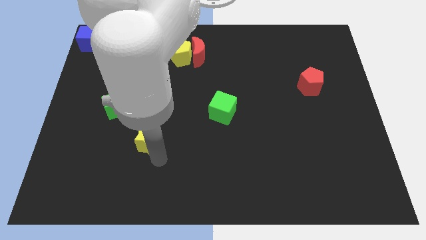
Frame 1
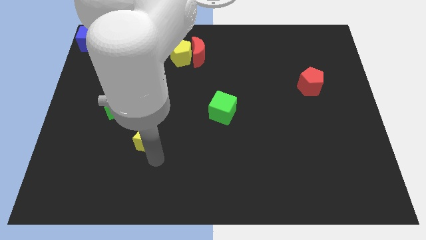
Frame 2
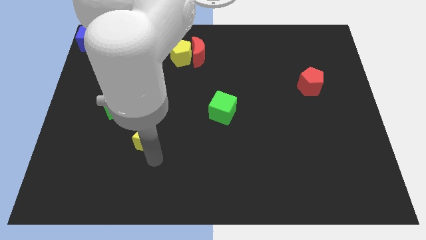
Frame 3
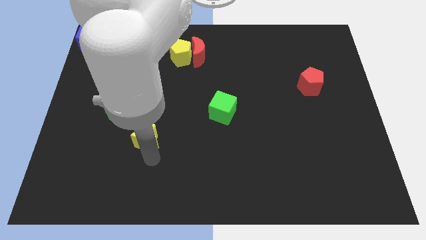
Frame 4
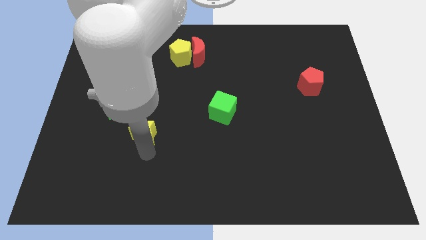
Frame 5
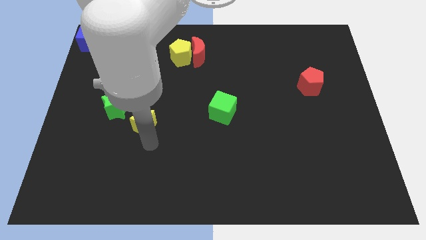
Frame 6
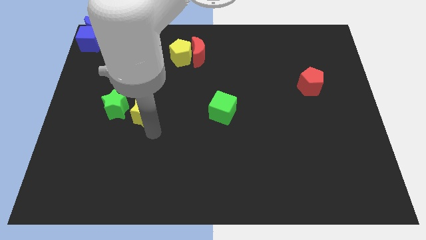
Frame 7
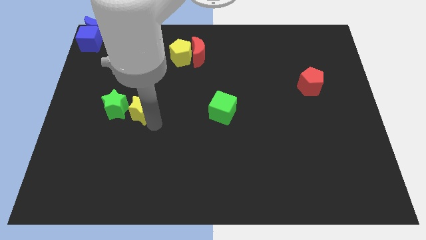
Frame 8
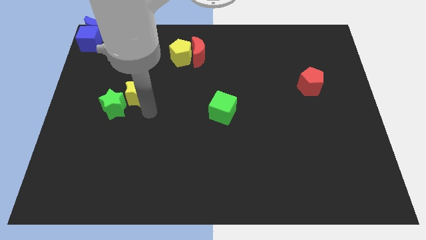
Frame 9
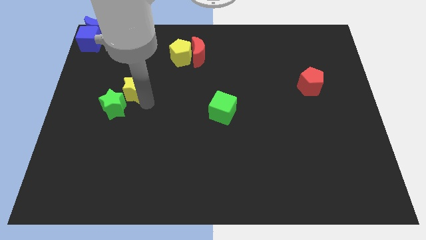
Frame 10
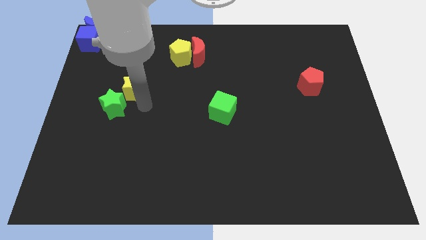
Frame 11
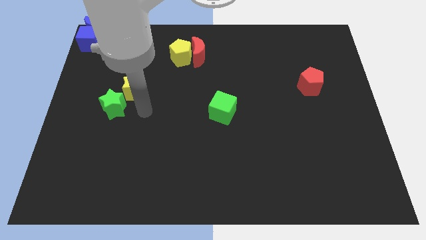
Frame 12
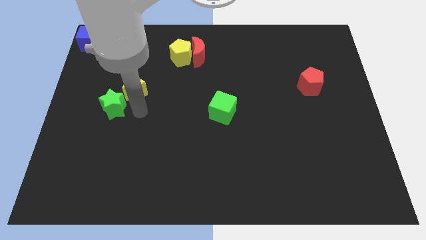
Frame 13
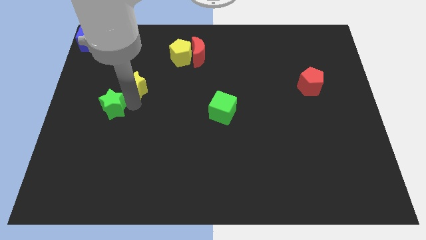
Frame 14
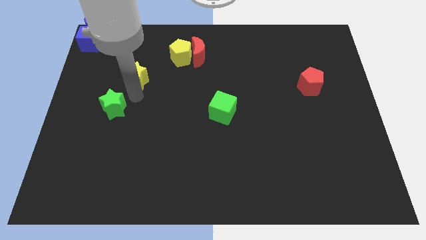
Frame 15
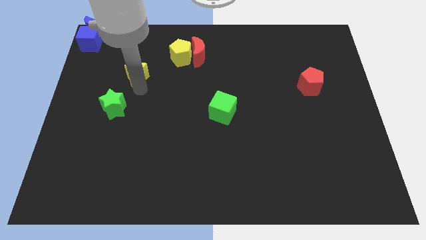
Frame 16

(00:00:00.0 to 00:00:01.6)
push yellow star upwards

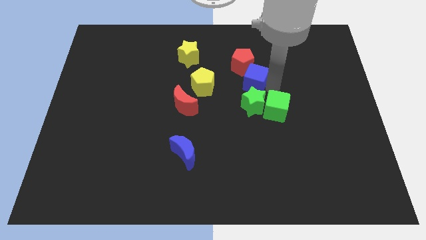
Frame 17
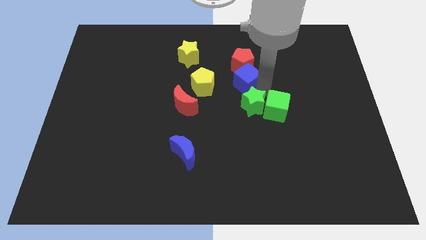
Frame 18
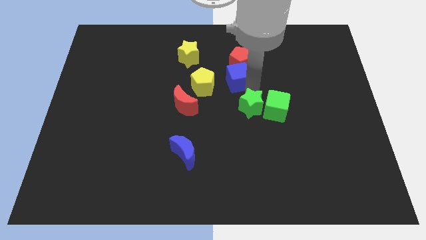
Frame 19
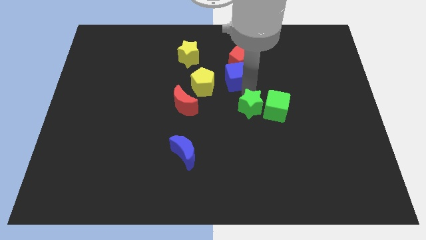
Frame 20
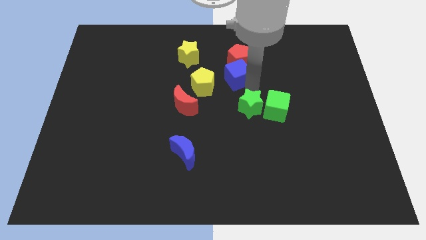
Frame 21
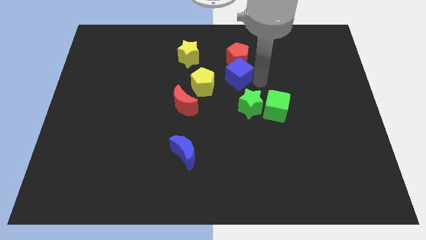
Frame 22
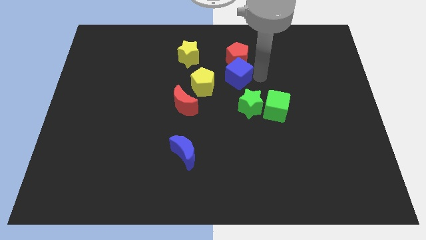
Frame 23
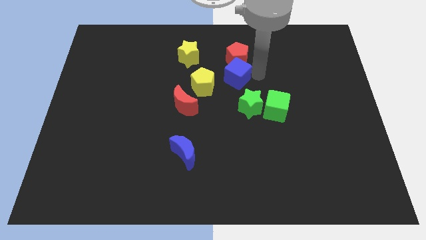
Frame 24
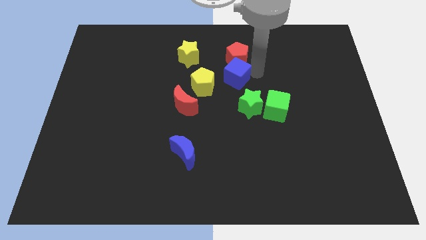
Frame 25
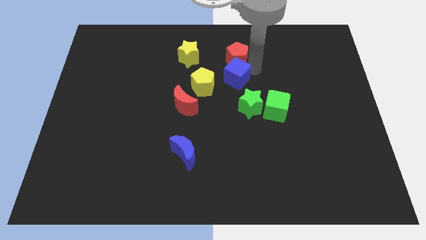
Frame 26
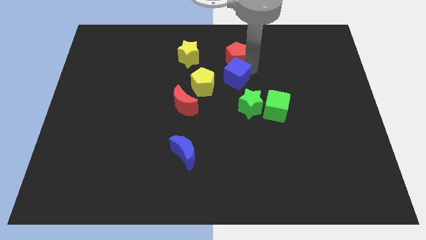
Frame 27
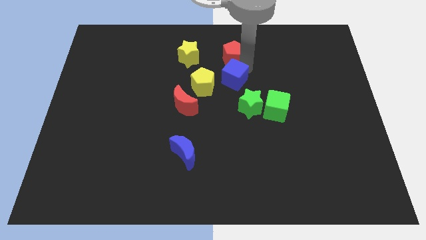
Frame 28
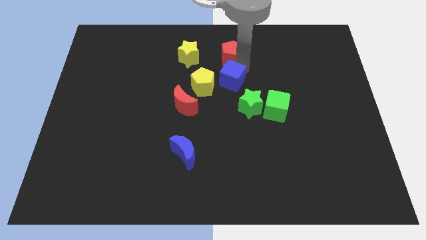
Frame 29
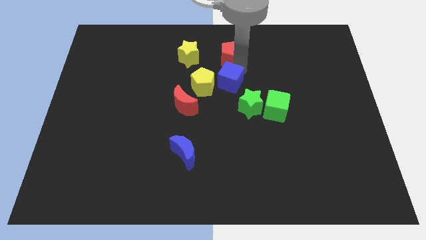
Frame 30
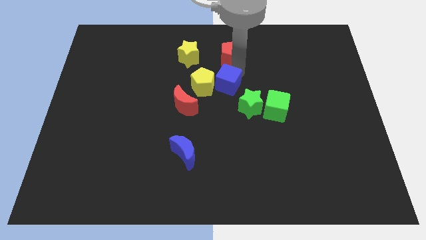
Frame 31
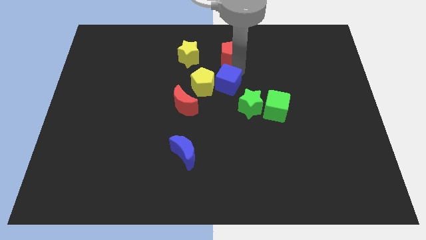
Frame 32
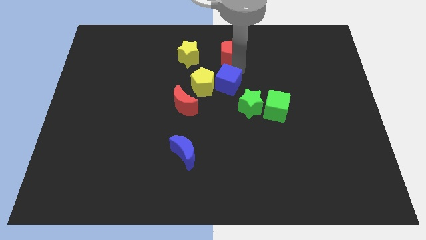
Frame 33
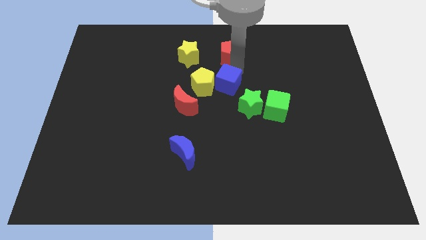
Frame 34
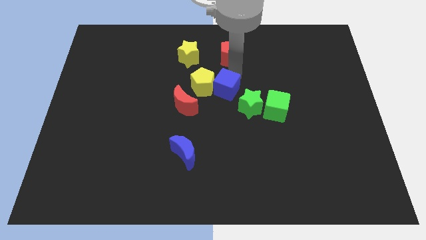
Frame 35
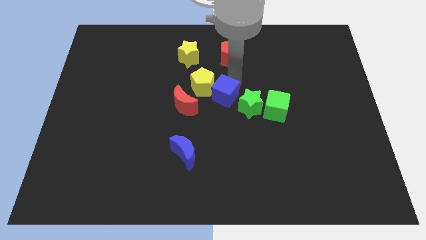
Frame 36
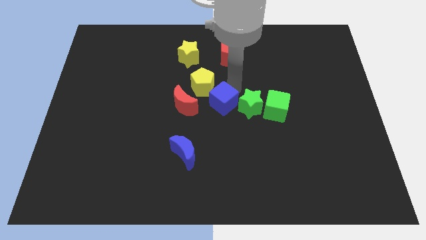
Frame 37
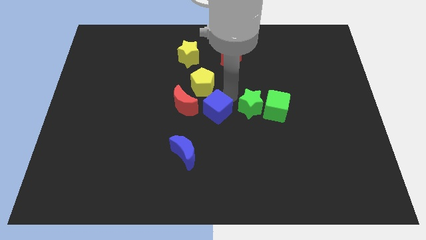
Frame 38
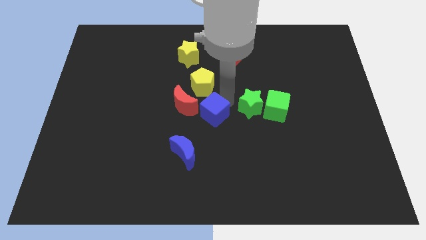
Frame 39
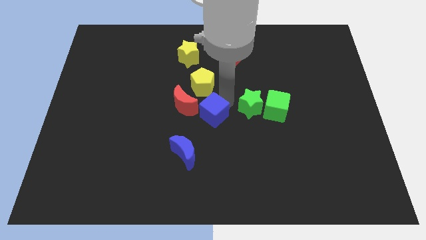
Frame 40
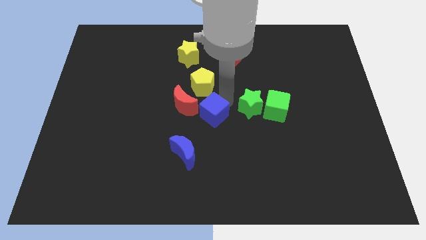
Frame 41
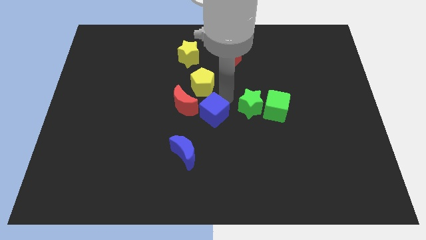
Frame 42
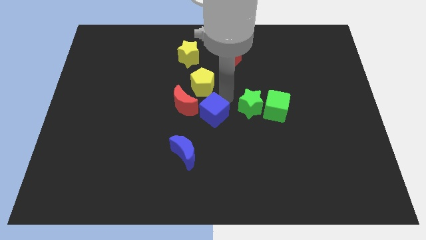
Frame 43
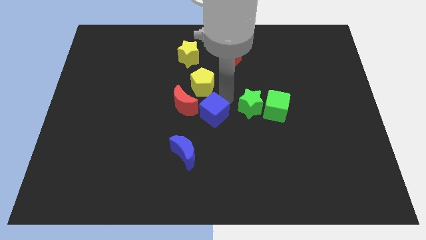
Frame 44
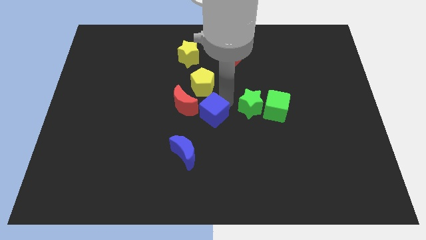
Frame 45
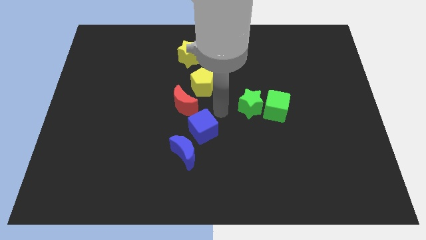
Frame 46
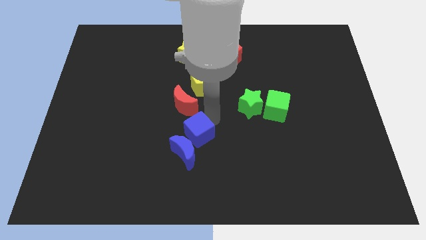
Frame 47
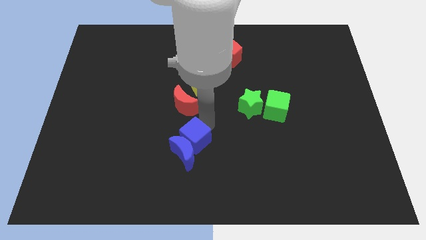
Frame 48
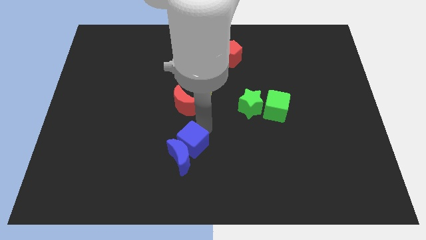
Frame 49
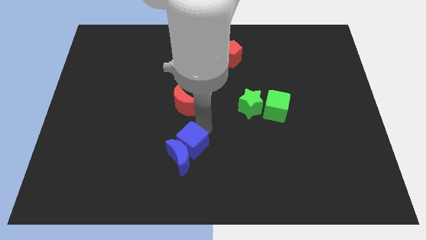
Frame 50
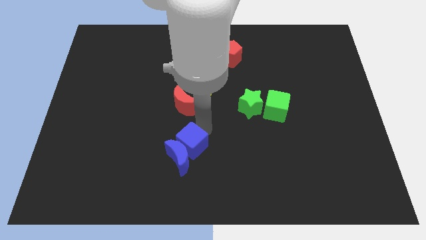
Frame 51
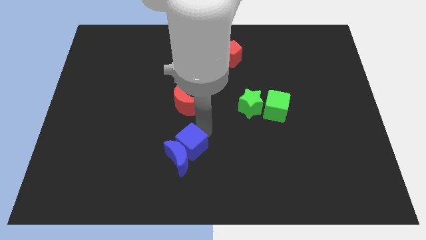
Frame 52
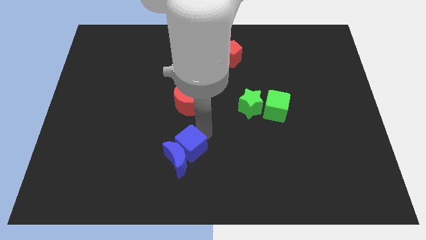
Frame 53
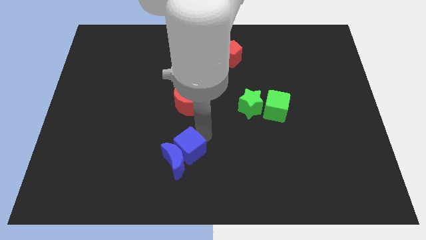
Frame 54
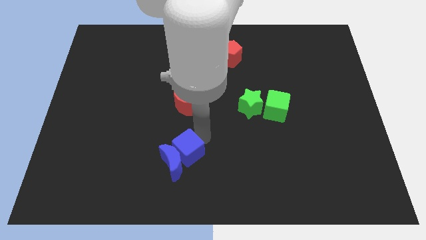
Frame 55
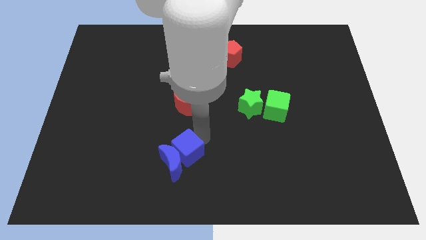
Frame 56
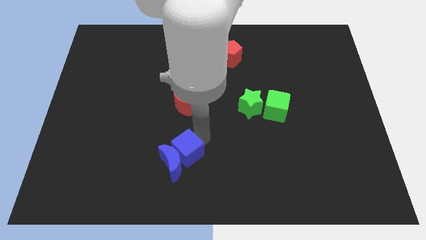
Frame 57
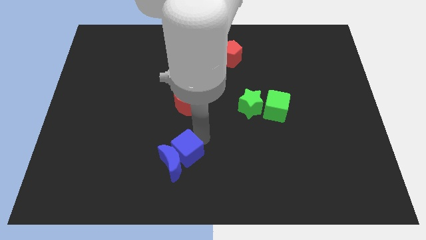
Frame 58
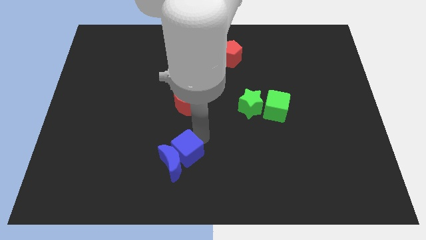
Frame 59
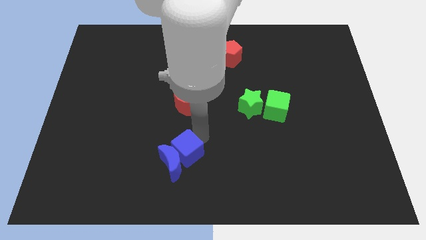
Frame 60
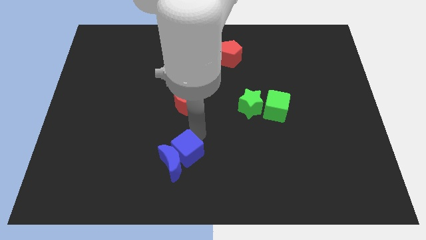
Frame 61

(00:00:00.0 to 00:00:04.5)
put the blue cube away from the red pentagon

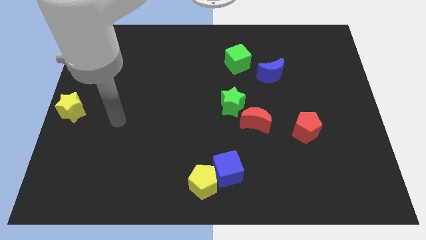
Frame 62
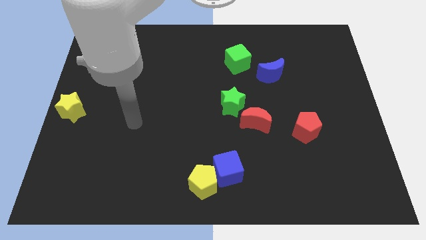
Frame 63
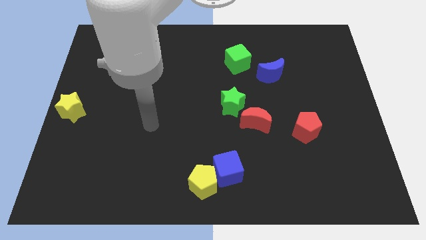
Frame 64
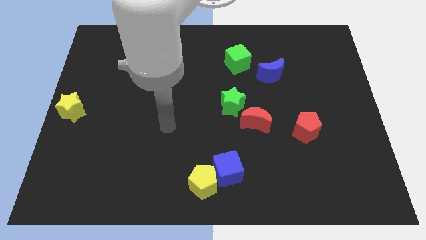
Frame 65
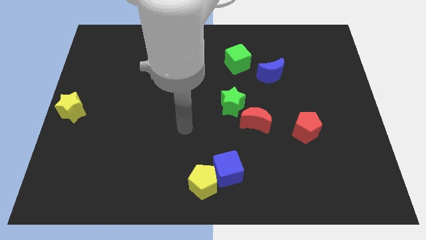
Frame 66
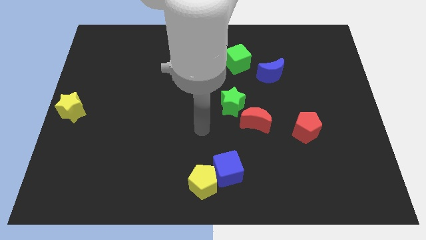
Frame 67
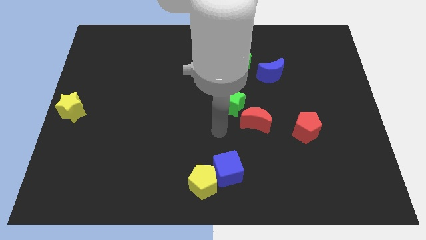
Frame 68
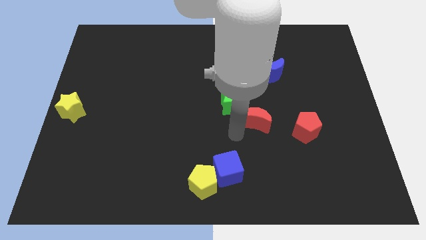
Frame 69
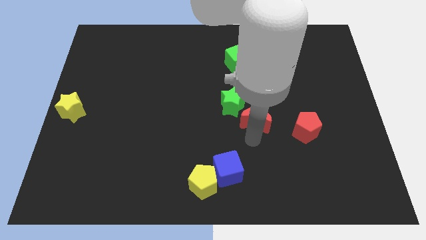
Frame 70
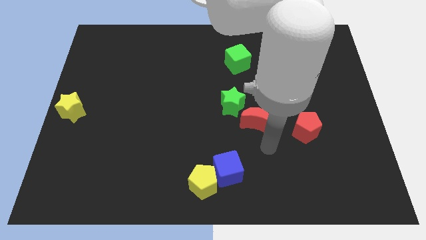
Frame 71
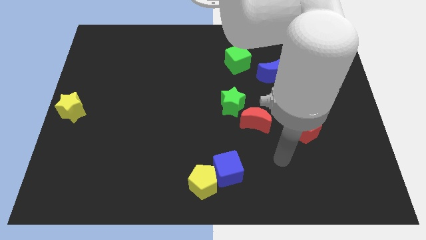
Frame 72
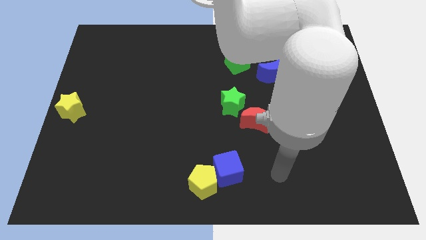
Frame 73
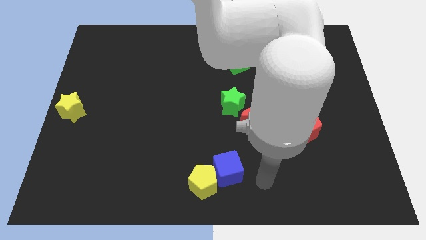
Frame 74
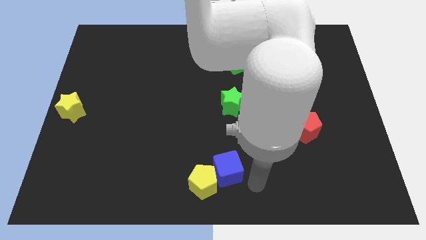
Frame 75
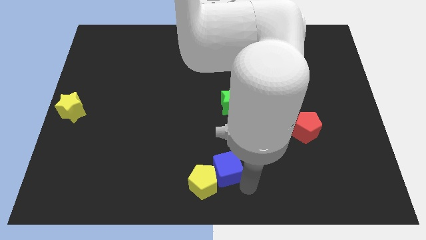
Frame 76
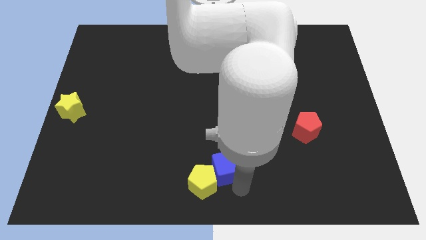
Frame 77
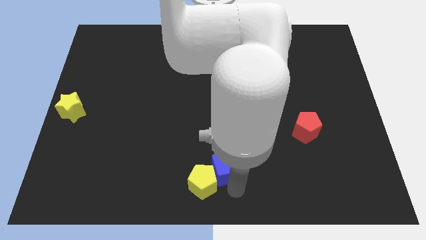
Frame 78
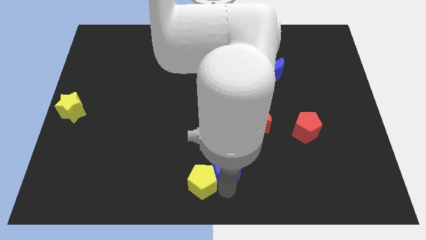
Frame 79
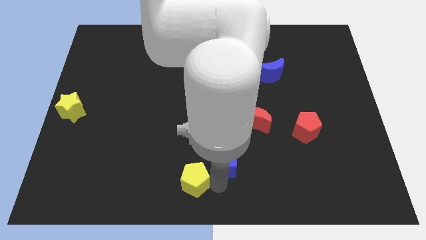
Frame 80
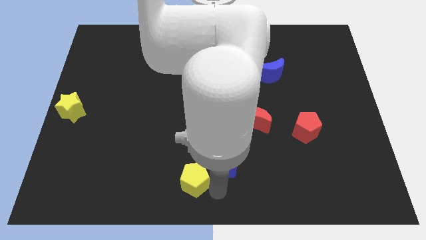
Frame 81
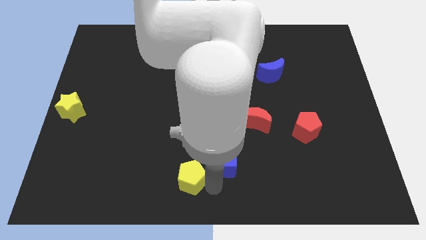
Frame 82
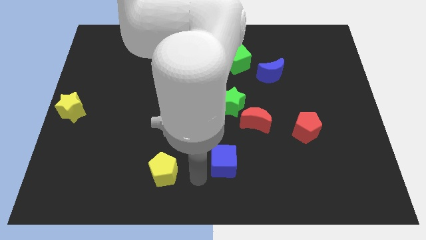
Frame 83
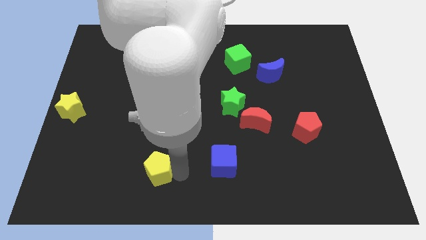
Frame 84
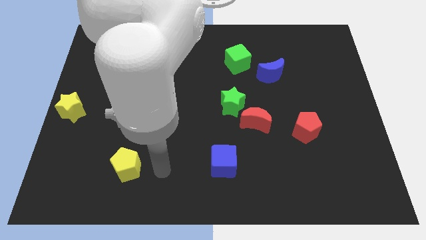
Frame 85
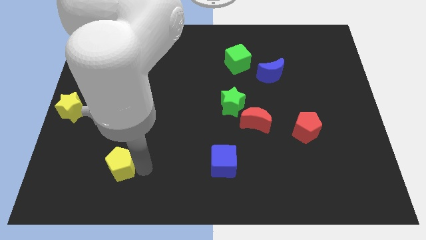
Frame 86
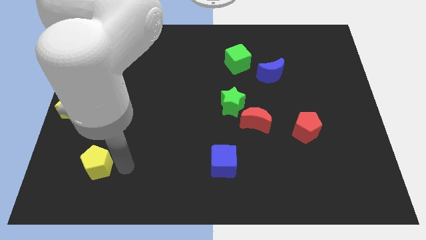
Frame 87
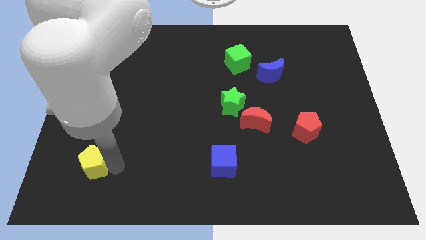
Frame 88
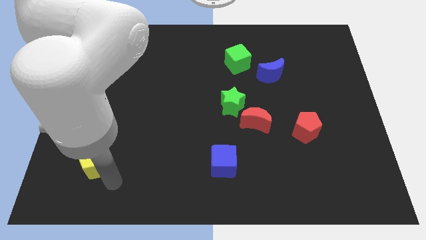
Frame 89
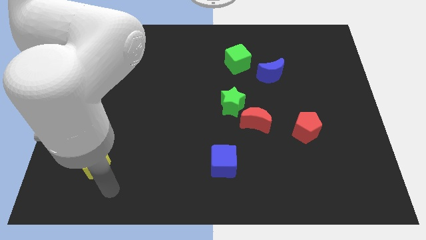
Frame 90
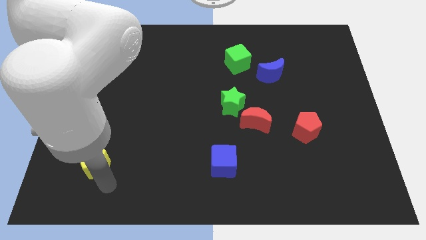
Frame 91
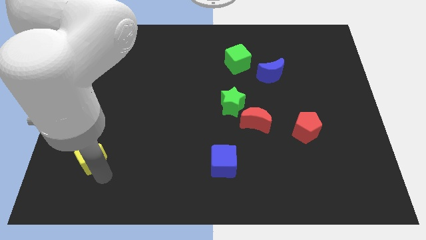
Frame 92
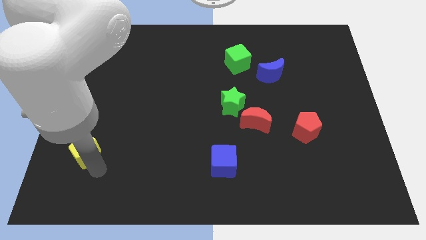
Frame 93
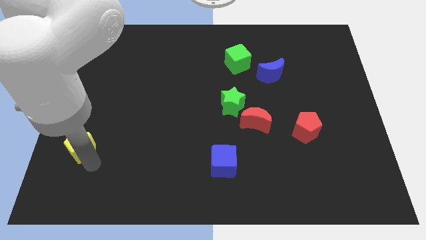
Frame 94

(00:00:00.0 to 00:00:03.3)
move the yellow pentagon towards the yellow star
